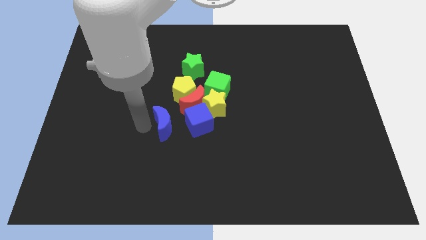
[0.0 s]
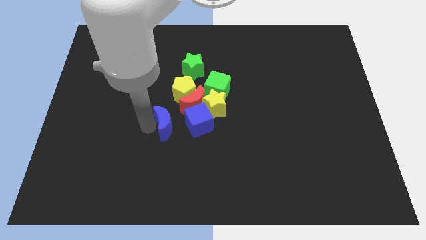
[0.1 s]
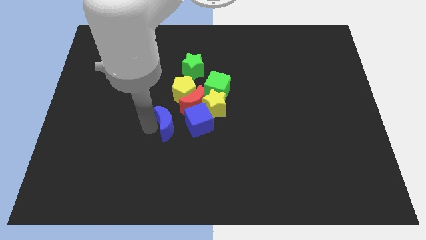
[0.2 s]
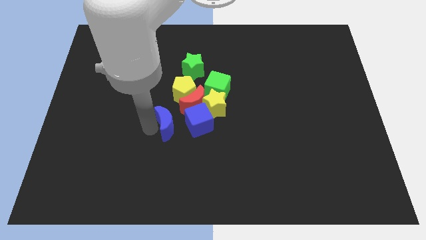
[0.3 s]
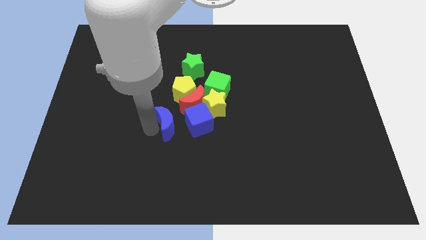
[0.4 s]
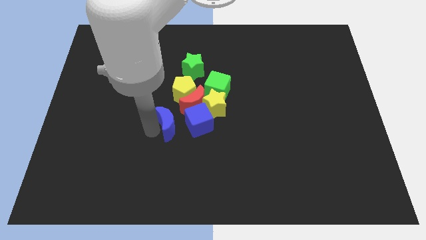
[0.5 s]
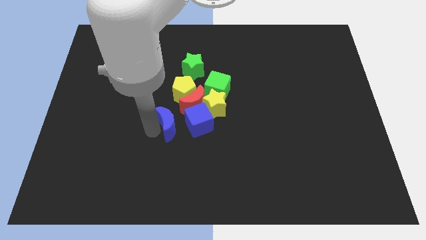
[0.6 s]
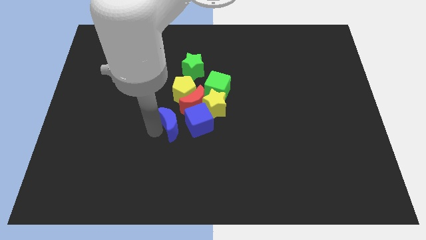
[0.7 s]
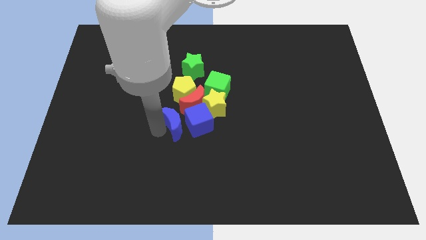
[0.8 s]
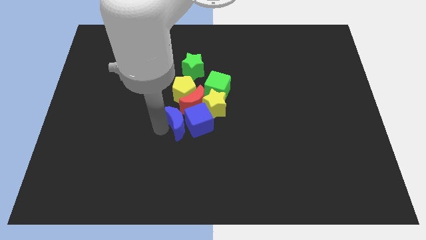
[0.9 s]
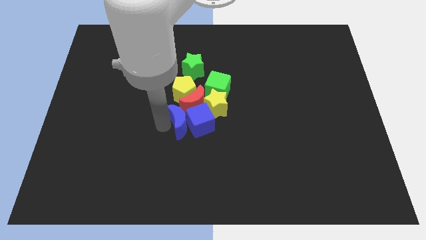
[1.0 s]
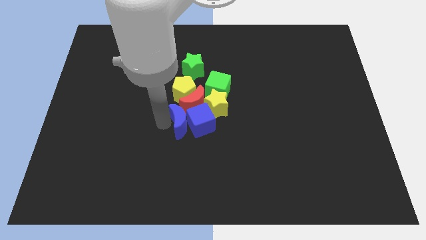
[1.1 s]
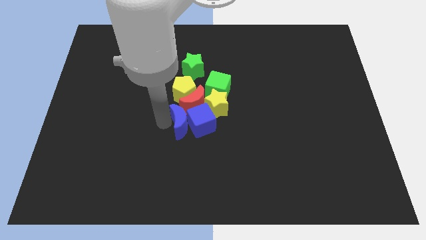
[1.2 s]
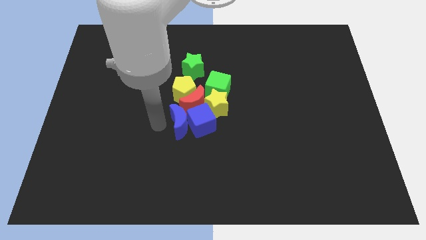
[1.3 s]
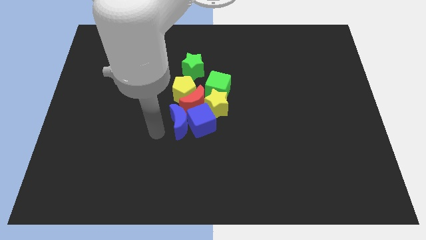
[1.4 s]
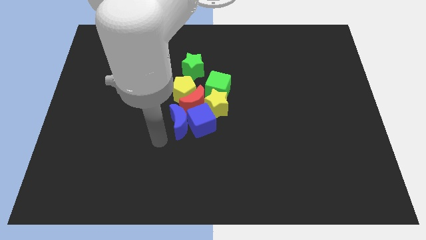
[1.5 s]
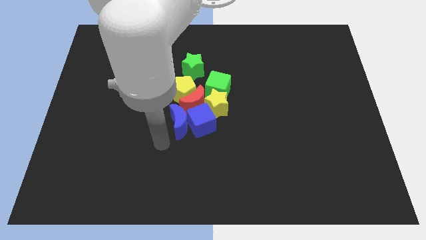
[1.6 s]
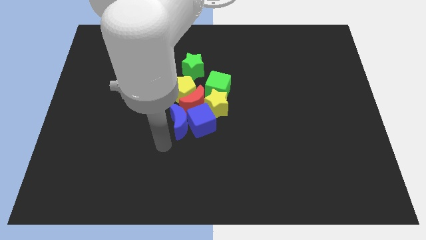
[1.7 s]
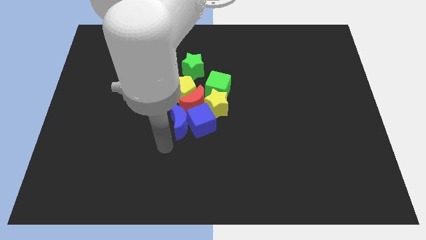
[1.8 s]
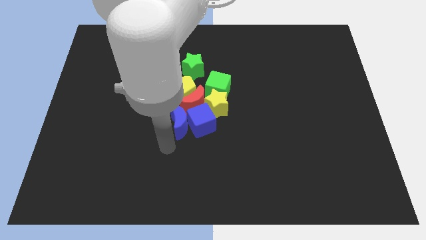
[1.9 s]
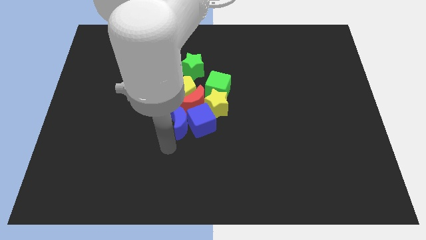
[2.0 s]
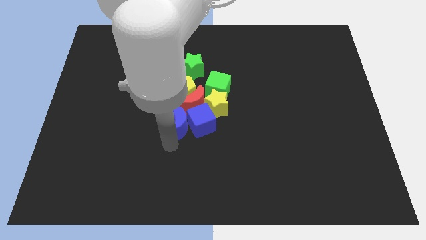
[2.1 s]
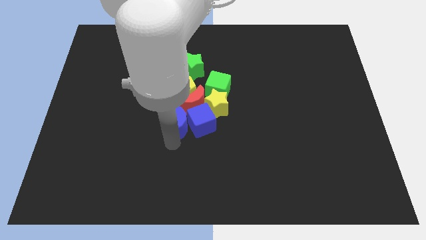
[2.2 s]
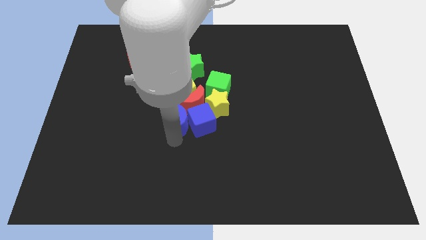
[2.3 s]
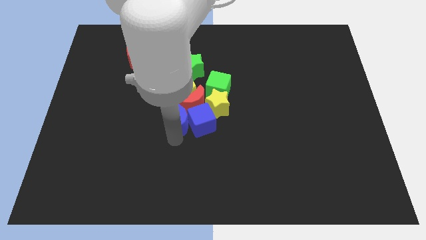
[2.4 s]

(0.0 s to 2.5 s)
push the blue moon into the blue cube

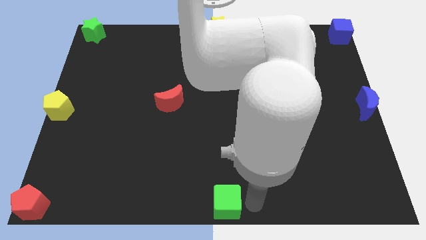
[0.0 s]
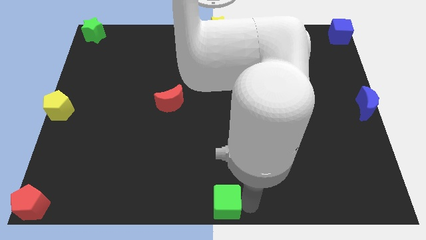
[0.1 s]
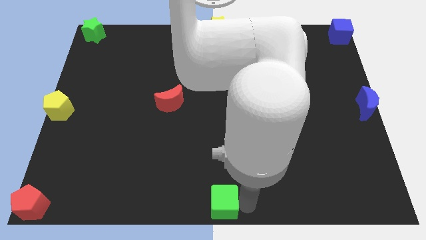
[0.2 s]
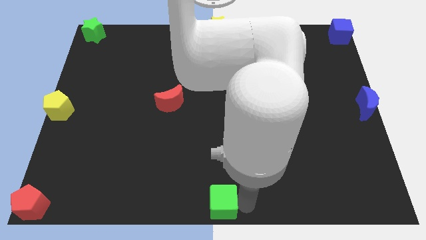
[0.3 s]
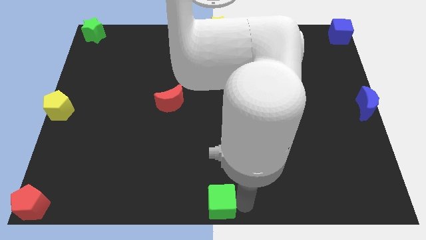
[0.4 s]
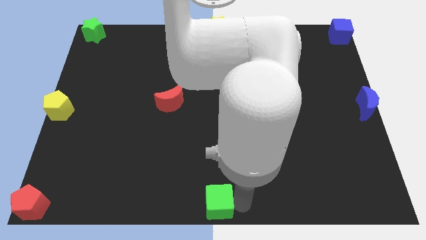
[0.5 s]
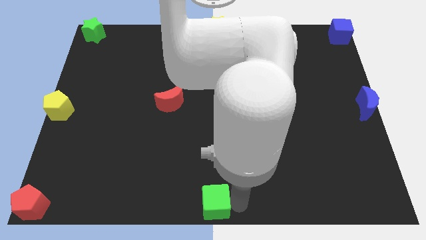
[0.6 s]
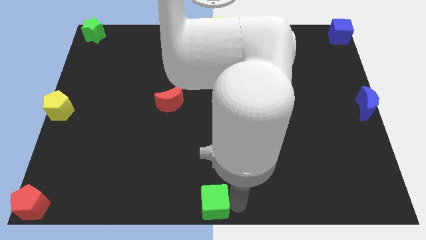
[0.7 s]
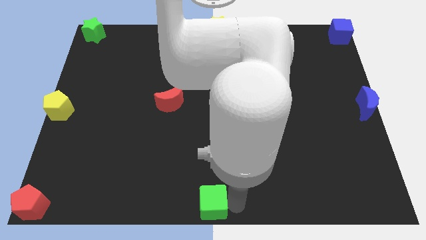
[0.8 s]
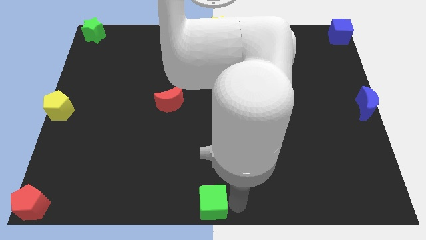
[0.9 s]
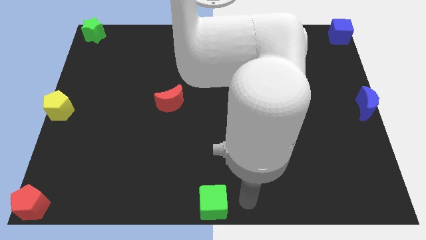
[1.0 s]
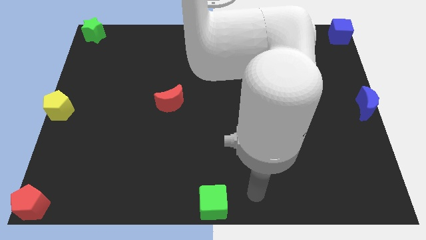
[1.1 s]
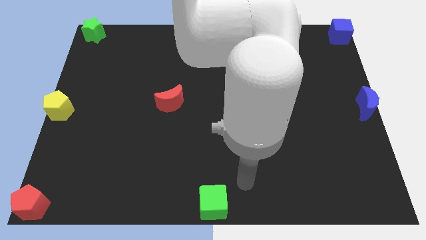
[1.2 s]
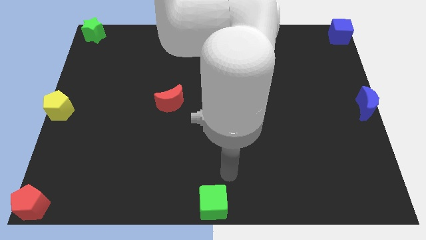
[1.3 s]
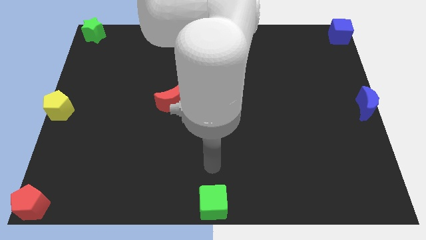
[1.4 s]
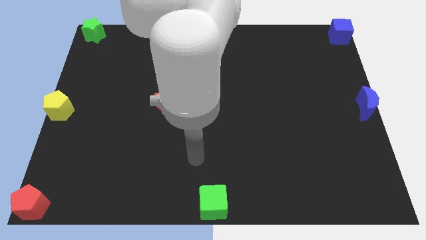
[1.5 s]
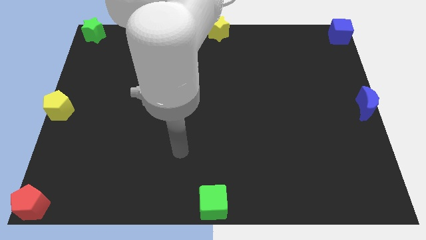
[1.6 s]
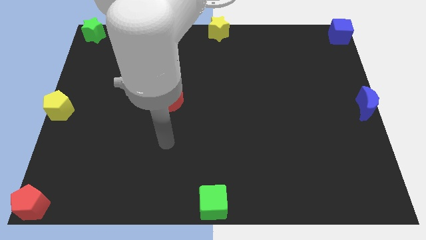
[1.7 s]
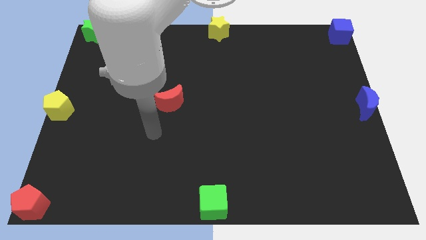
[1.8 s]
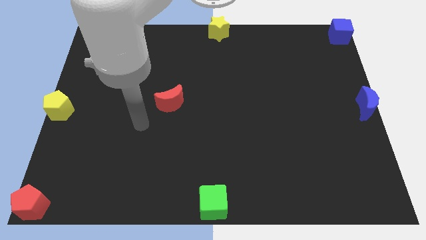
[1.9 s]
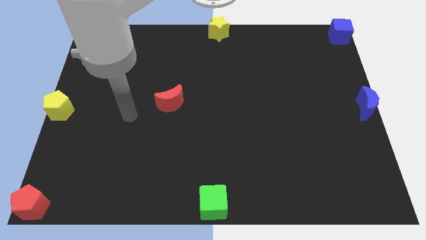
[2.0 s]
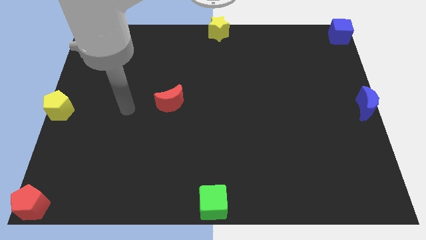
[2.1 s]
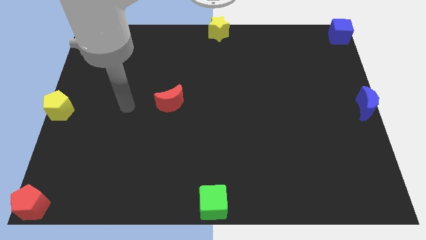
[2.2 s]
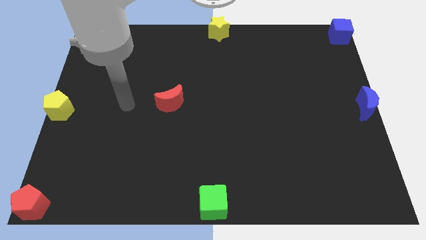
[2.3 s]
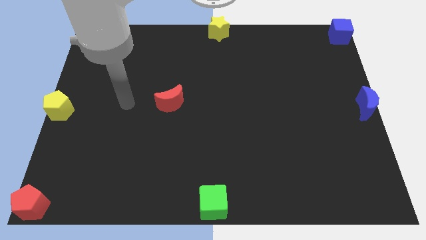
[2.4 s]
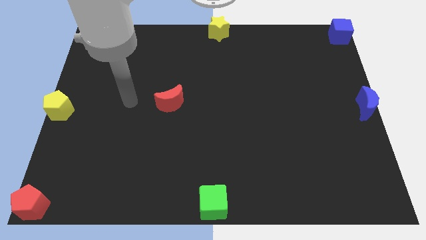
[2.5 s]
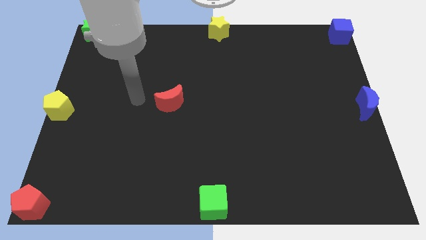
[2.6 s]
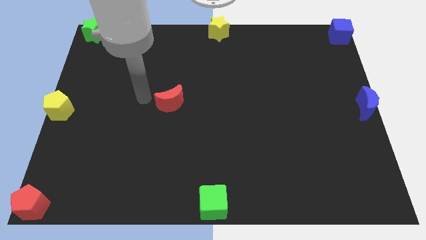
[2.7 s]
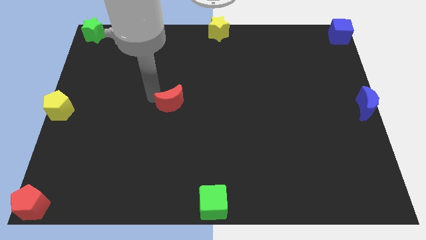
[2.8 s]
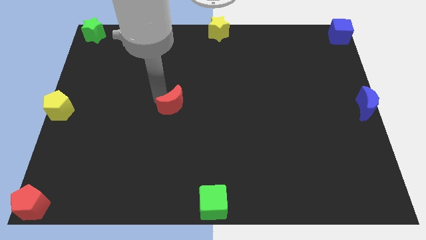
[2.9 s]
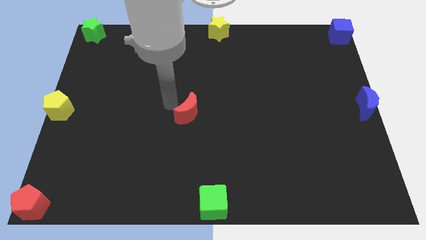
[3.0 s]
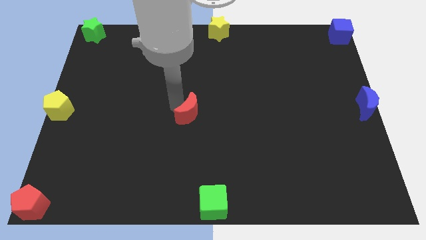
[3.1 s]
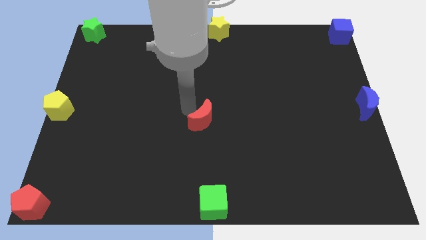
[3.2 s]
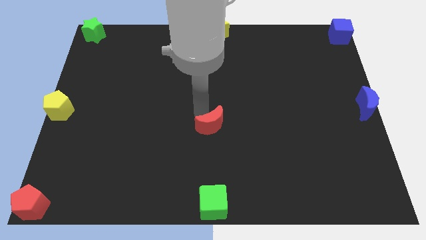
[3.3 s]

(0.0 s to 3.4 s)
move your arm to the top of the red crescent

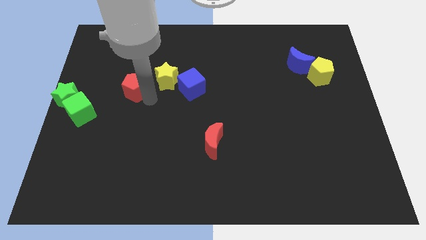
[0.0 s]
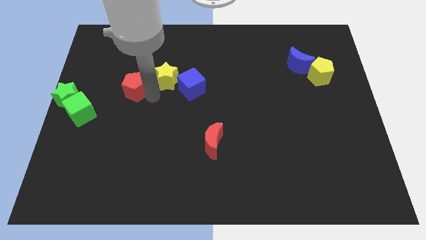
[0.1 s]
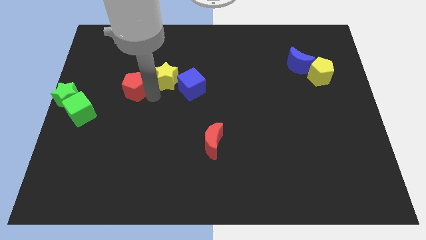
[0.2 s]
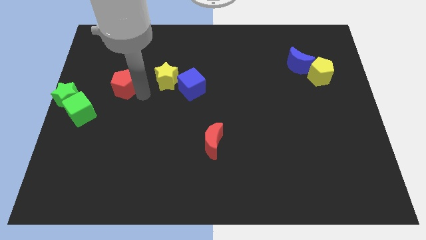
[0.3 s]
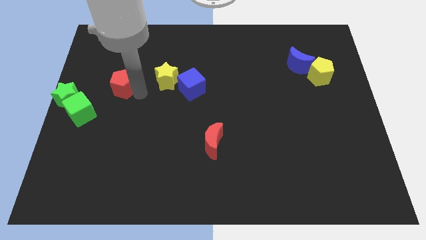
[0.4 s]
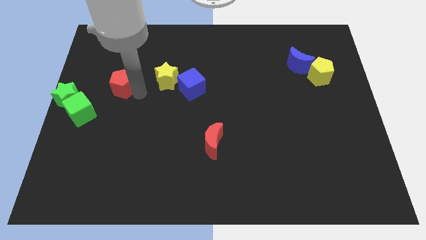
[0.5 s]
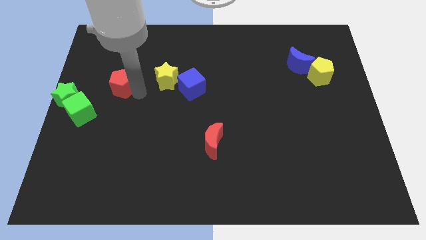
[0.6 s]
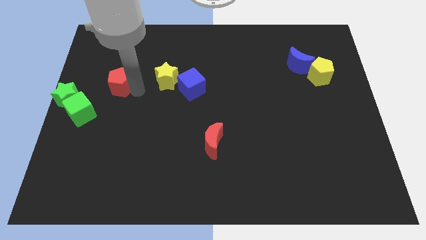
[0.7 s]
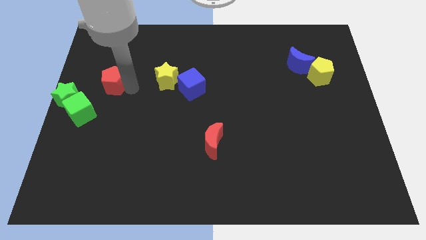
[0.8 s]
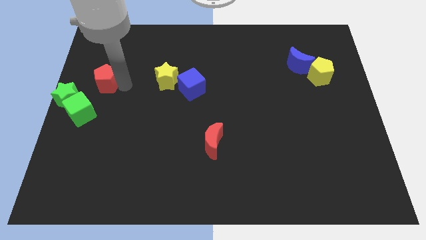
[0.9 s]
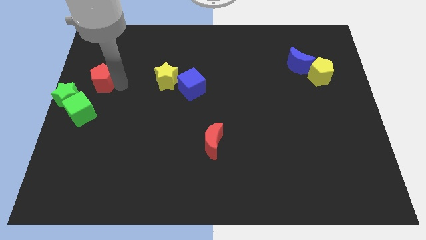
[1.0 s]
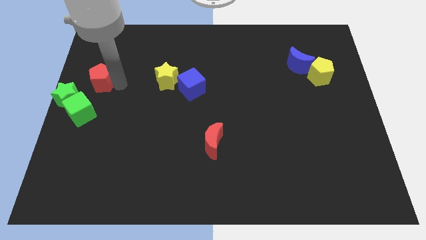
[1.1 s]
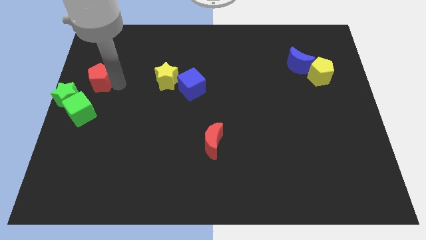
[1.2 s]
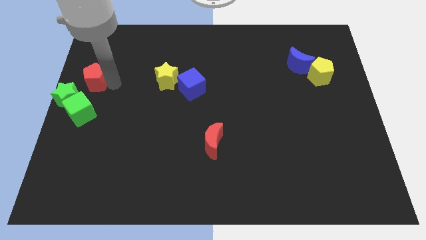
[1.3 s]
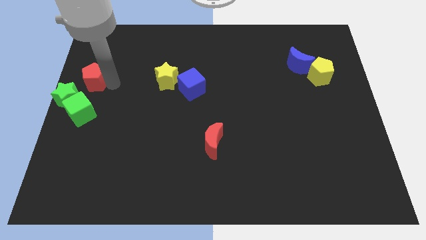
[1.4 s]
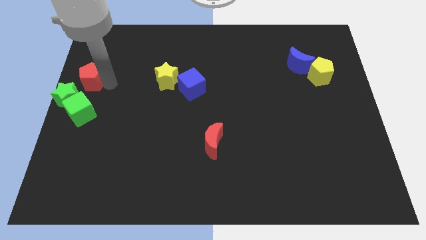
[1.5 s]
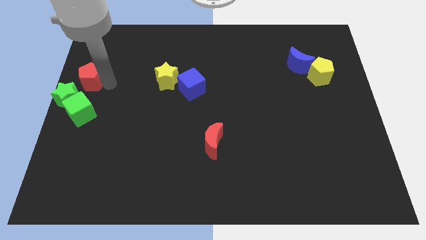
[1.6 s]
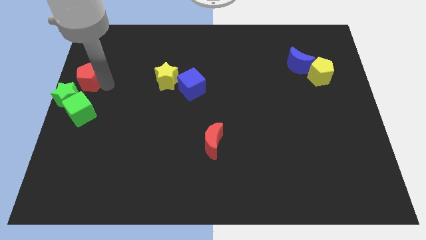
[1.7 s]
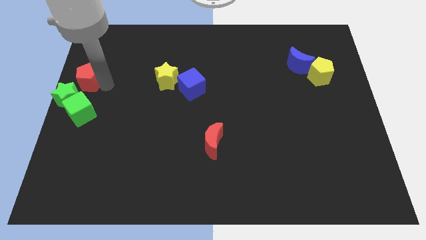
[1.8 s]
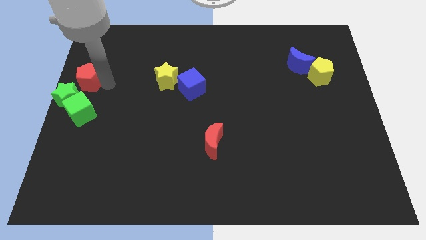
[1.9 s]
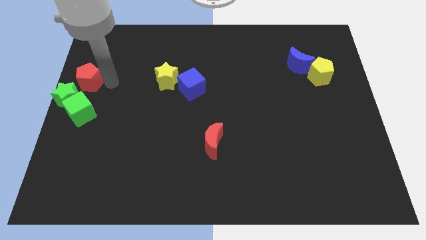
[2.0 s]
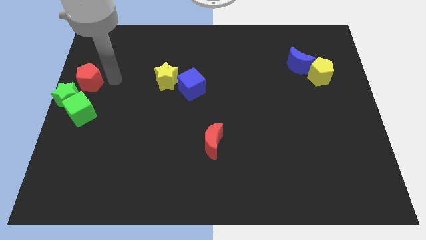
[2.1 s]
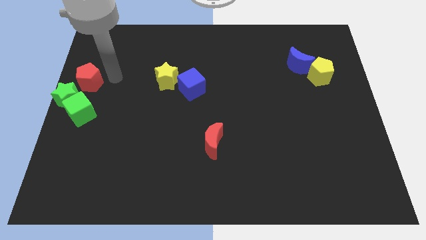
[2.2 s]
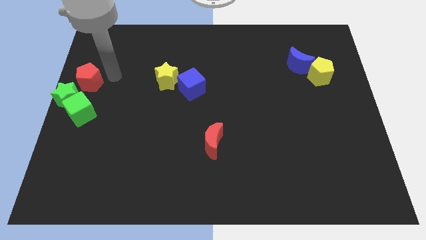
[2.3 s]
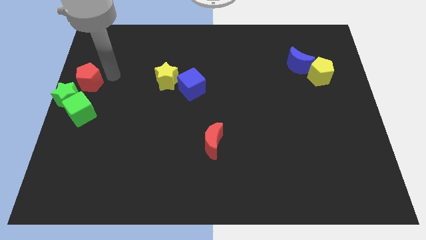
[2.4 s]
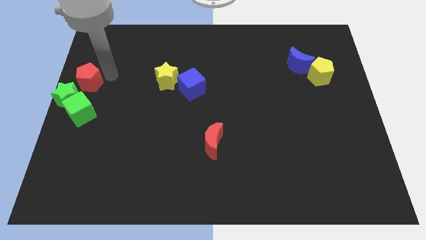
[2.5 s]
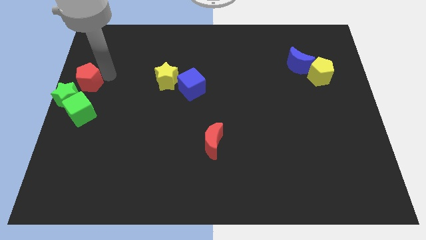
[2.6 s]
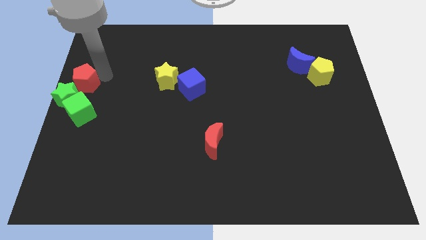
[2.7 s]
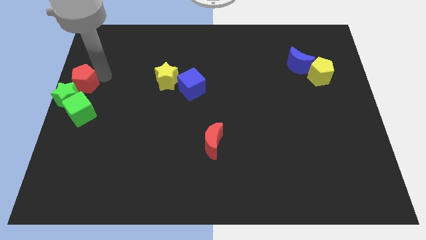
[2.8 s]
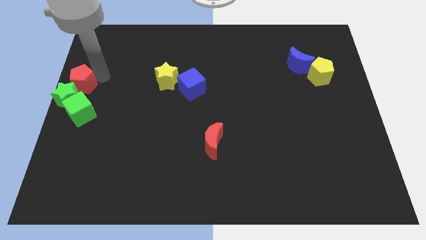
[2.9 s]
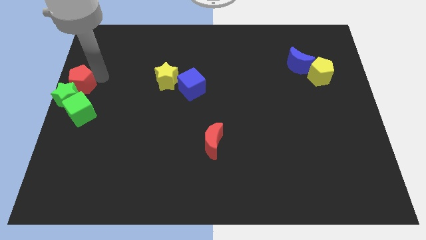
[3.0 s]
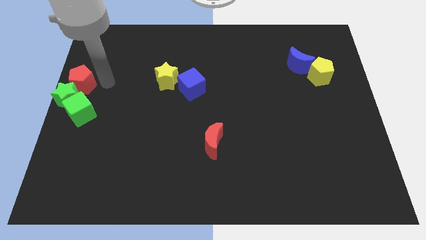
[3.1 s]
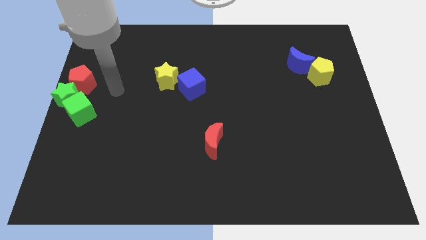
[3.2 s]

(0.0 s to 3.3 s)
move the red pentagon close to the green star
